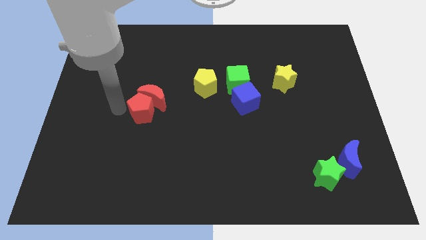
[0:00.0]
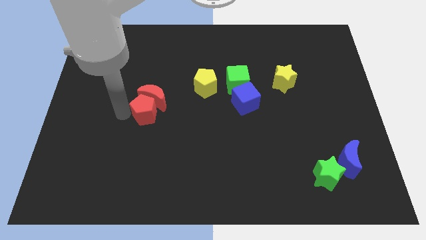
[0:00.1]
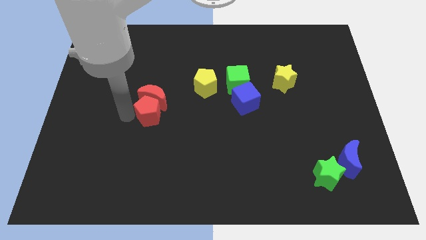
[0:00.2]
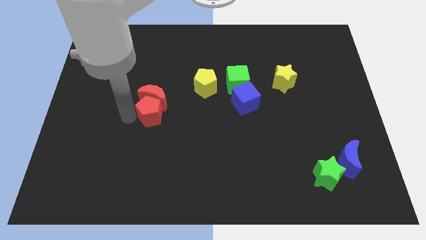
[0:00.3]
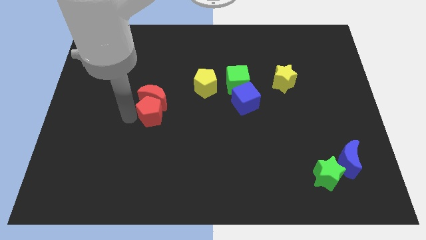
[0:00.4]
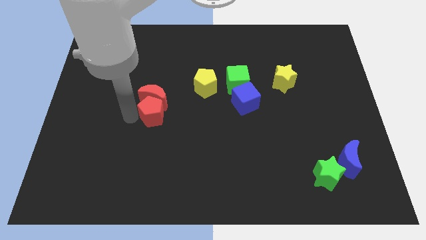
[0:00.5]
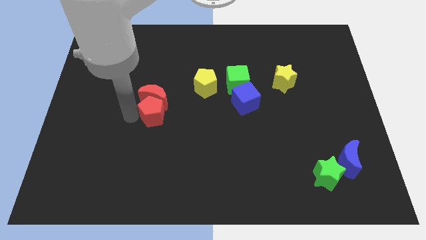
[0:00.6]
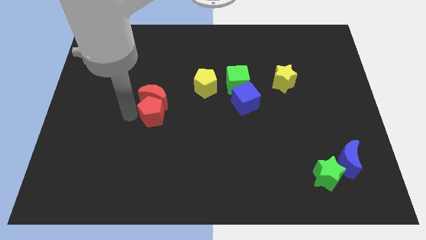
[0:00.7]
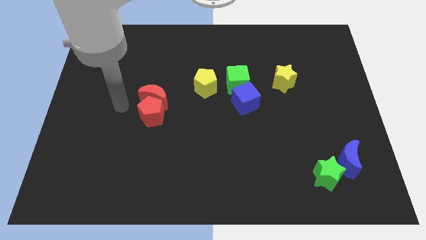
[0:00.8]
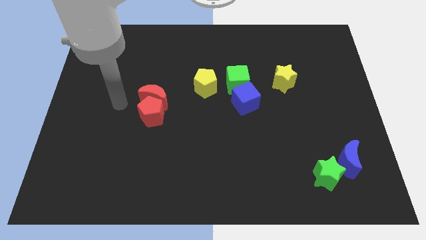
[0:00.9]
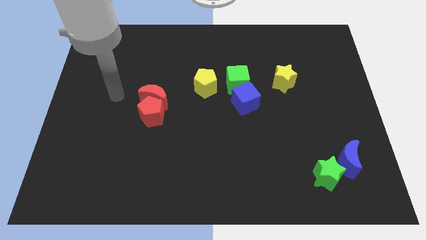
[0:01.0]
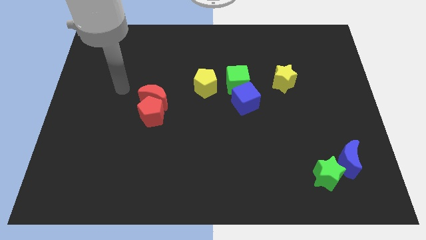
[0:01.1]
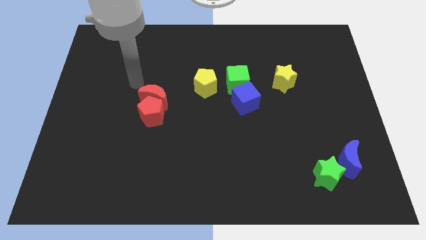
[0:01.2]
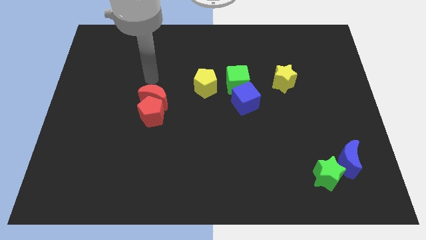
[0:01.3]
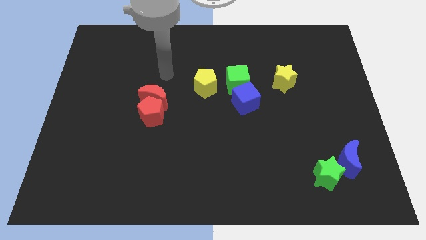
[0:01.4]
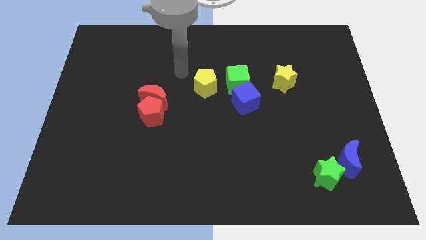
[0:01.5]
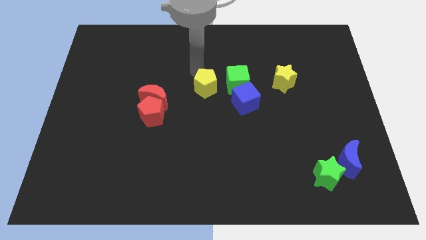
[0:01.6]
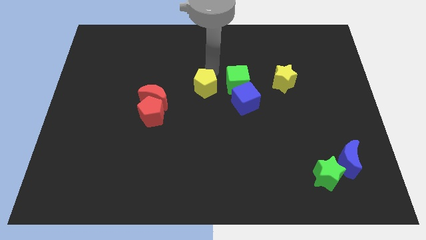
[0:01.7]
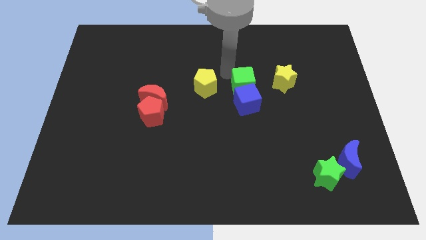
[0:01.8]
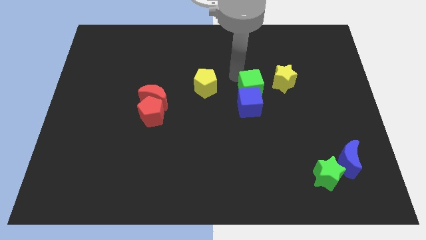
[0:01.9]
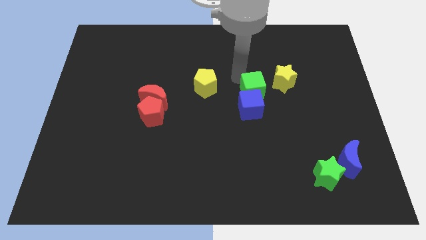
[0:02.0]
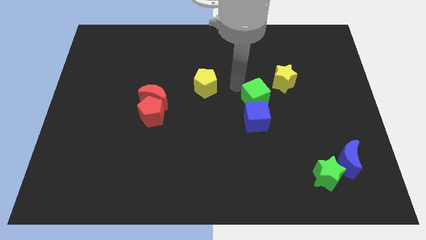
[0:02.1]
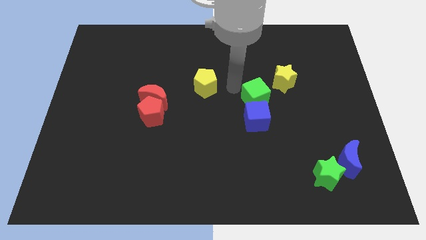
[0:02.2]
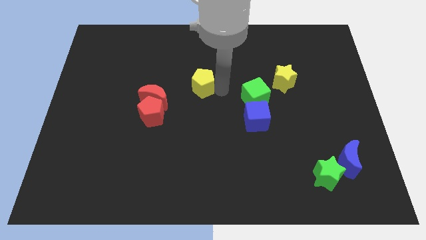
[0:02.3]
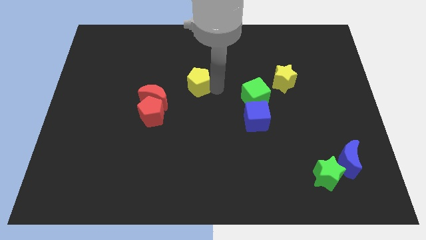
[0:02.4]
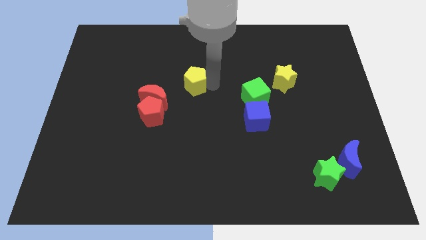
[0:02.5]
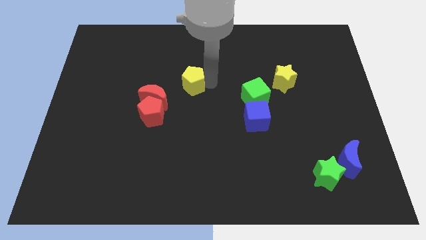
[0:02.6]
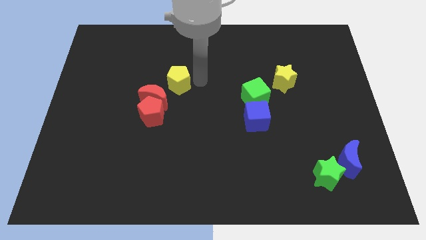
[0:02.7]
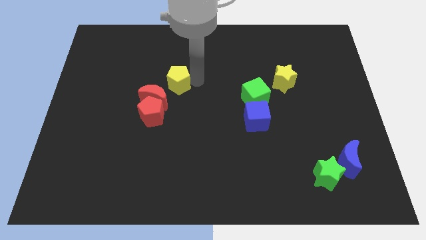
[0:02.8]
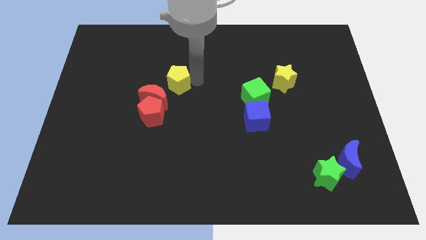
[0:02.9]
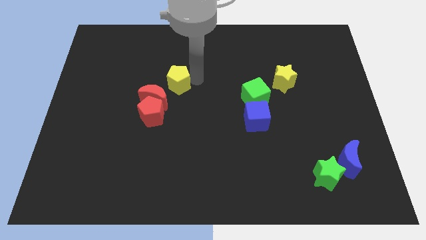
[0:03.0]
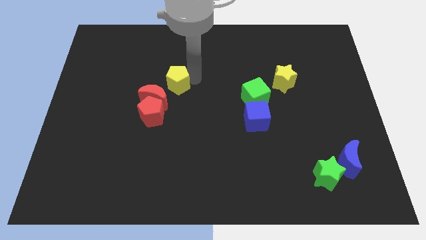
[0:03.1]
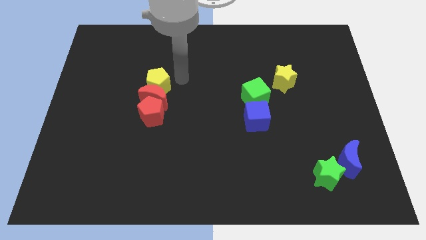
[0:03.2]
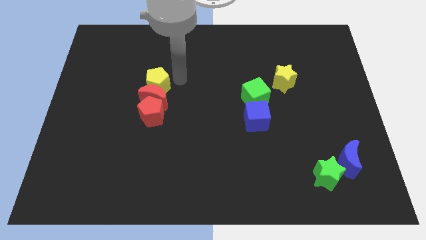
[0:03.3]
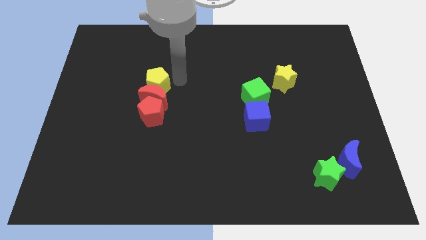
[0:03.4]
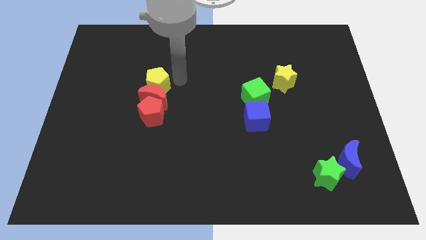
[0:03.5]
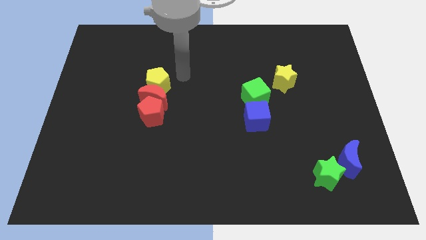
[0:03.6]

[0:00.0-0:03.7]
move yellow pentagon above the red crescent

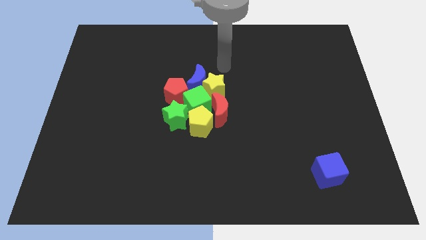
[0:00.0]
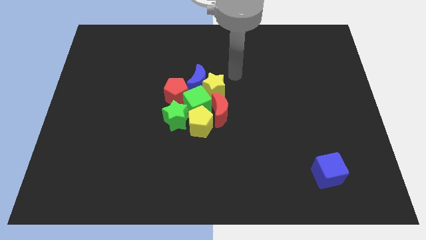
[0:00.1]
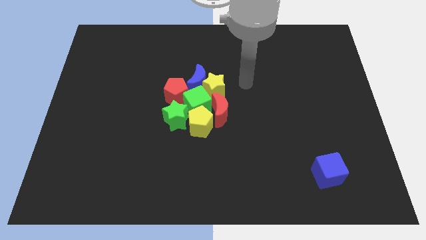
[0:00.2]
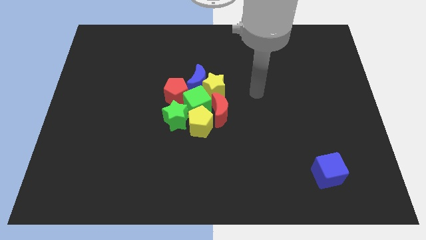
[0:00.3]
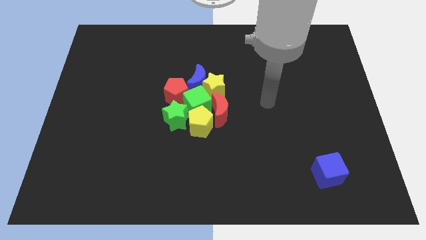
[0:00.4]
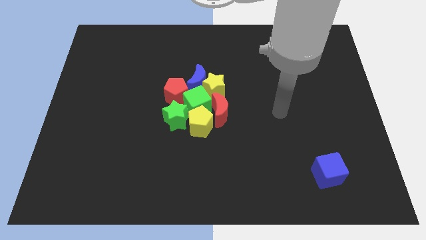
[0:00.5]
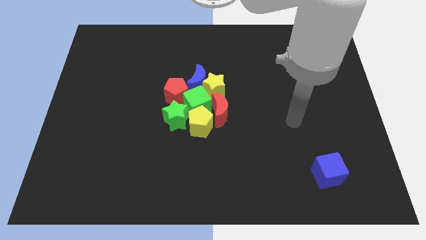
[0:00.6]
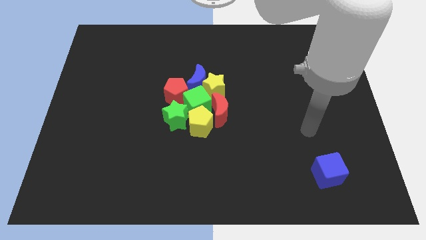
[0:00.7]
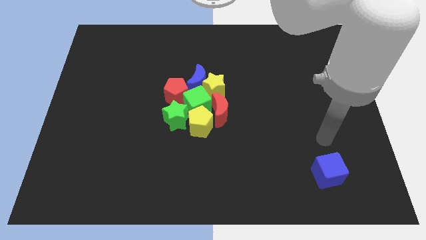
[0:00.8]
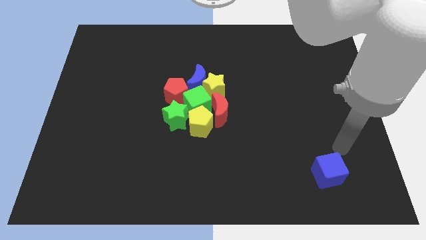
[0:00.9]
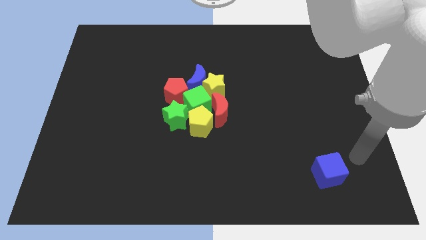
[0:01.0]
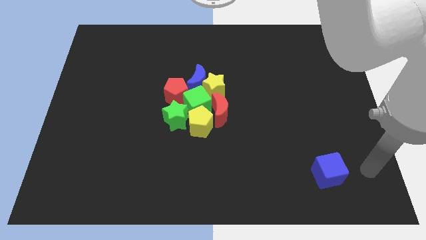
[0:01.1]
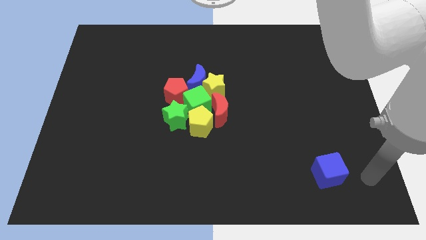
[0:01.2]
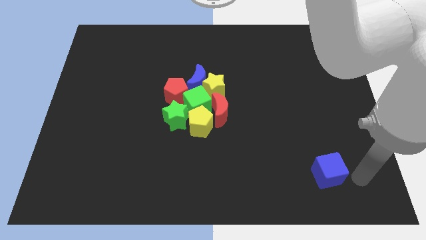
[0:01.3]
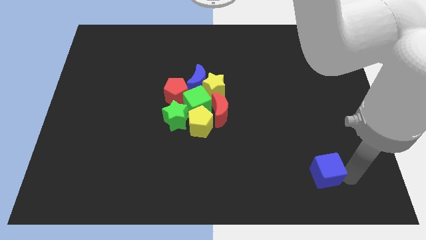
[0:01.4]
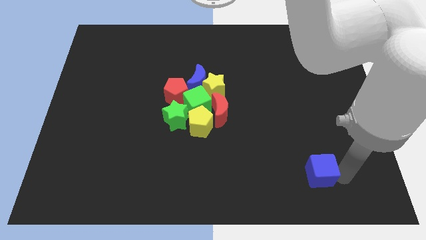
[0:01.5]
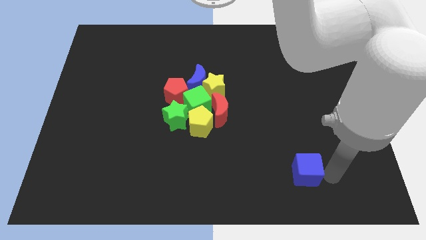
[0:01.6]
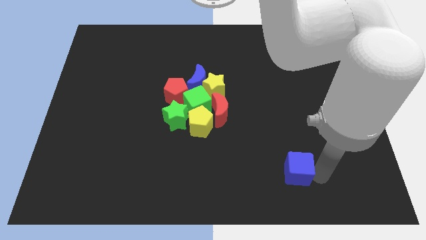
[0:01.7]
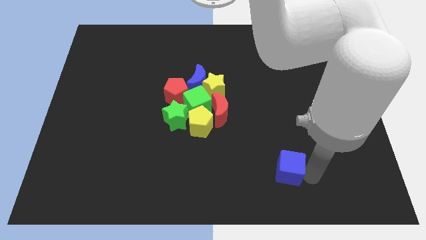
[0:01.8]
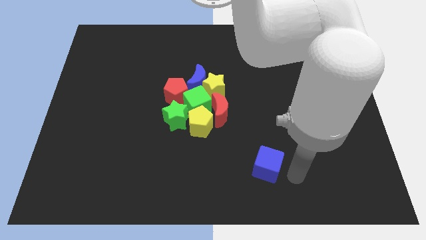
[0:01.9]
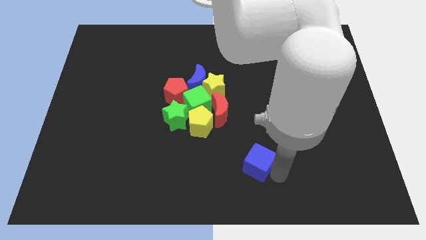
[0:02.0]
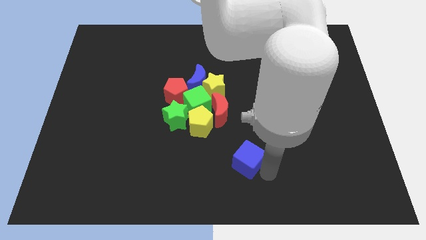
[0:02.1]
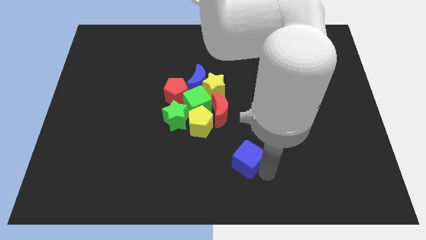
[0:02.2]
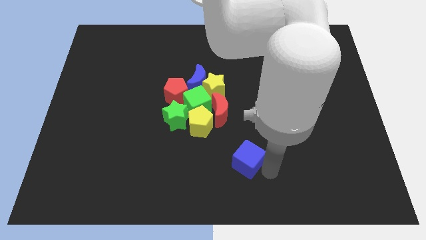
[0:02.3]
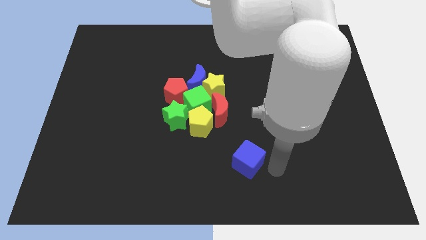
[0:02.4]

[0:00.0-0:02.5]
slide the blue cube towards the group of blocks

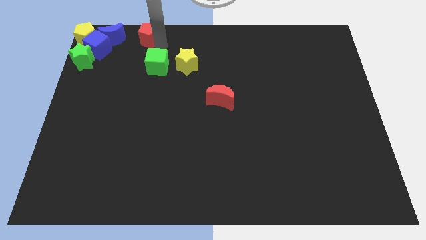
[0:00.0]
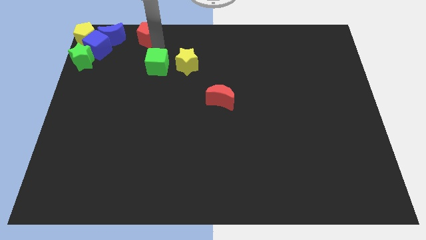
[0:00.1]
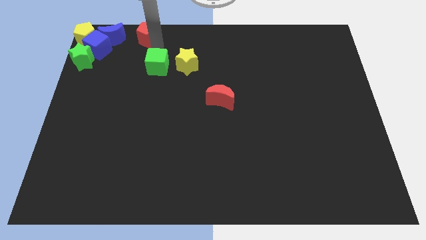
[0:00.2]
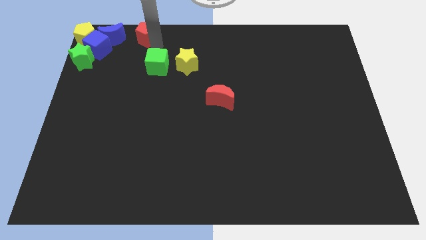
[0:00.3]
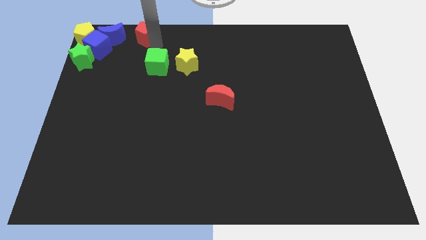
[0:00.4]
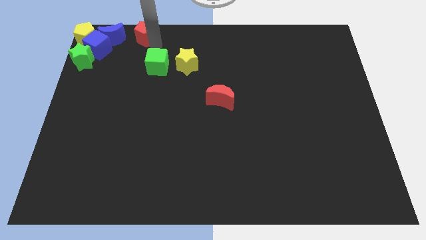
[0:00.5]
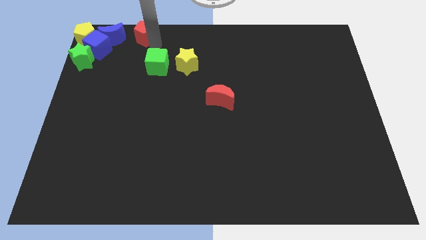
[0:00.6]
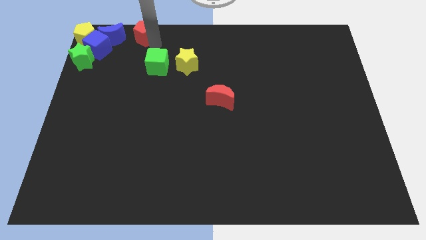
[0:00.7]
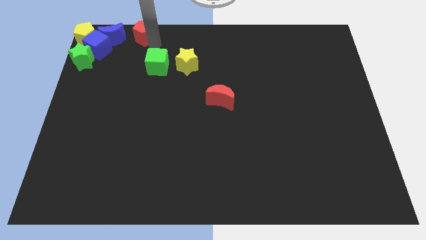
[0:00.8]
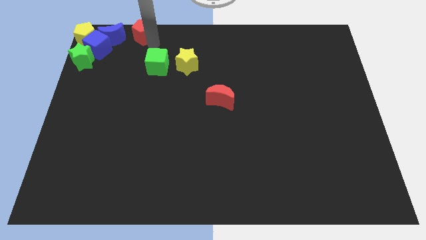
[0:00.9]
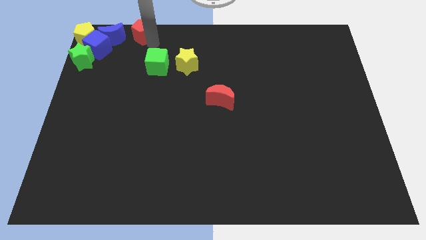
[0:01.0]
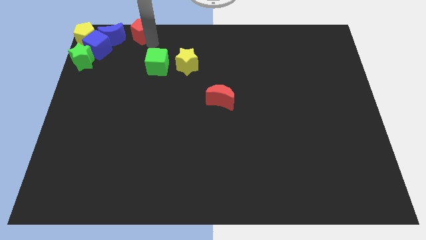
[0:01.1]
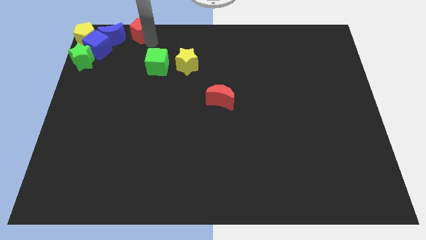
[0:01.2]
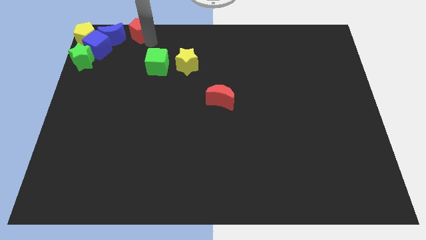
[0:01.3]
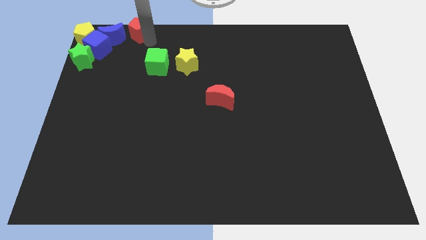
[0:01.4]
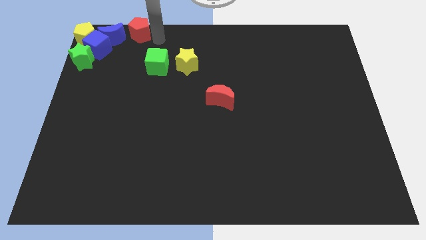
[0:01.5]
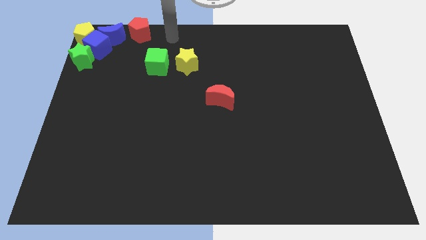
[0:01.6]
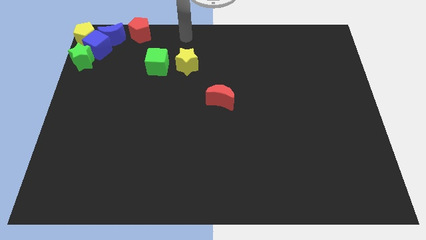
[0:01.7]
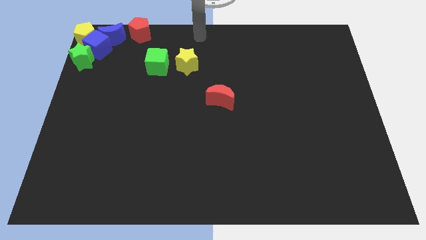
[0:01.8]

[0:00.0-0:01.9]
push the red pentagon towards the blue moon

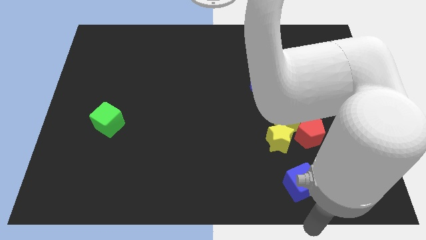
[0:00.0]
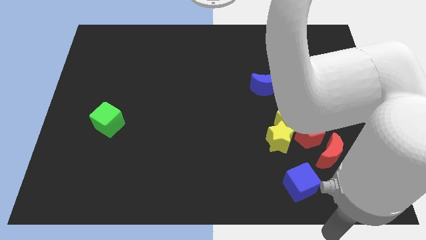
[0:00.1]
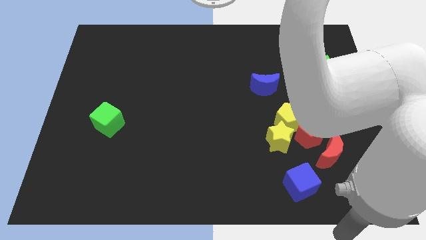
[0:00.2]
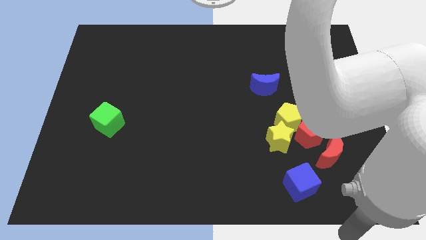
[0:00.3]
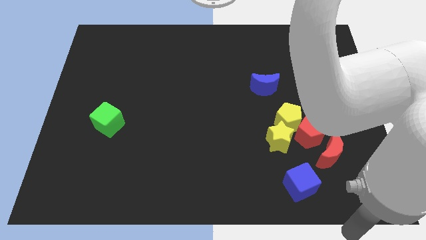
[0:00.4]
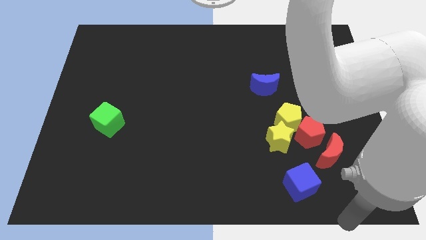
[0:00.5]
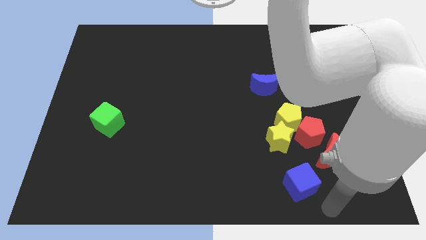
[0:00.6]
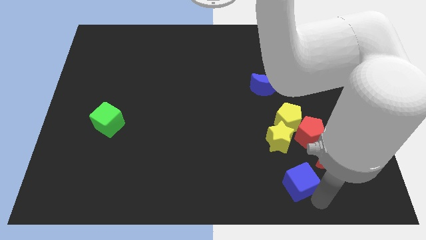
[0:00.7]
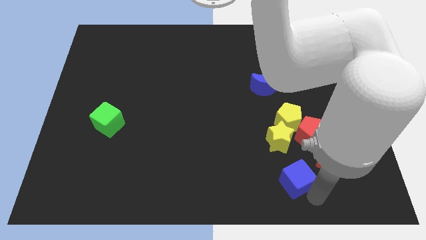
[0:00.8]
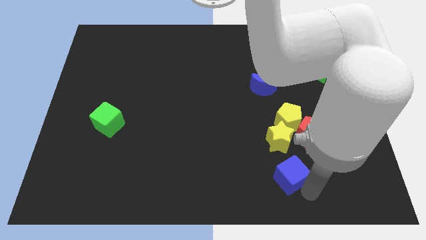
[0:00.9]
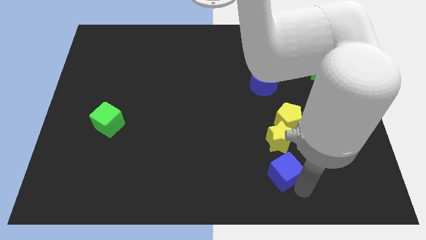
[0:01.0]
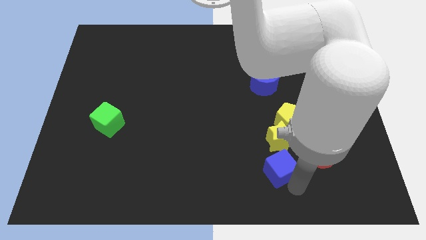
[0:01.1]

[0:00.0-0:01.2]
push blue cube towards yellow star
